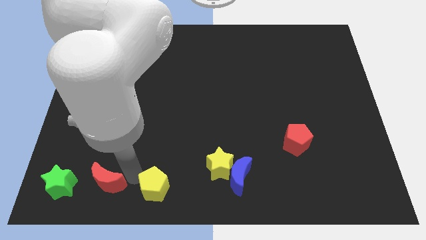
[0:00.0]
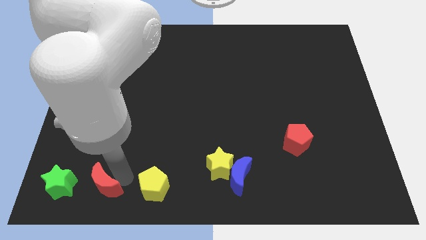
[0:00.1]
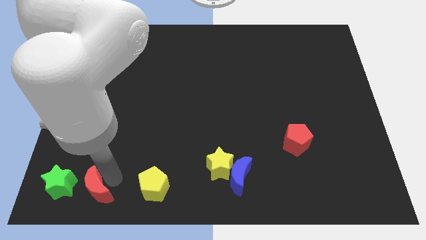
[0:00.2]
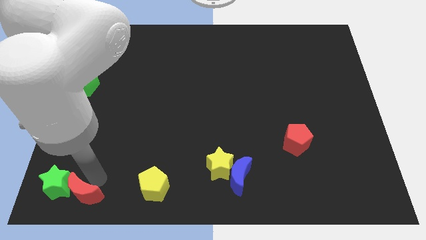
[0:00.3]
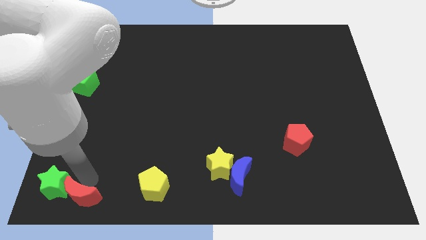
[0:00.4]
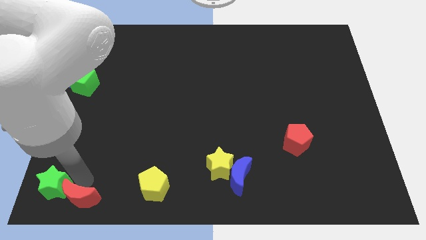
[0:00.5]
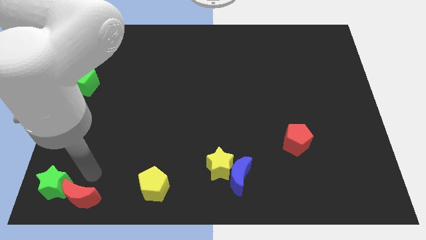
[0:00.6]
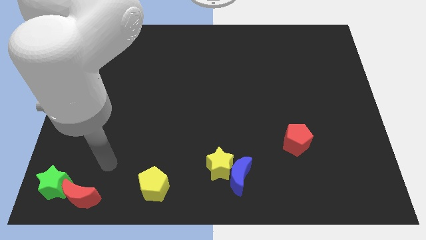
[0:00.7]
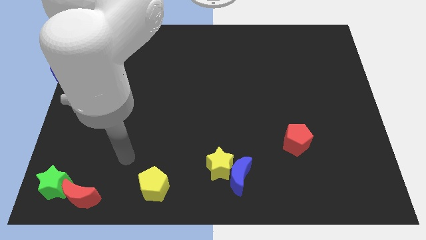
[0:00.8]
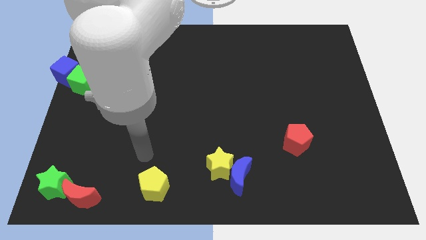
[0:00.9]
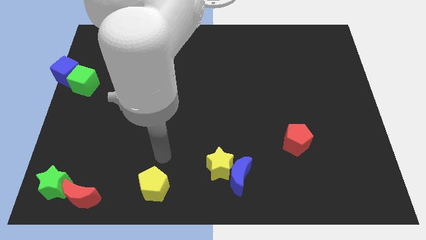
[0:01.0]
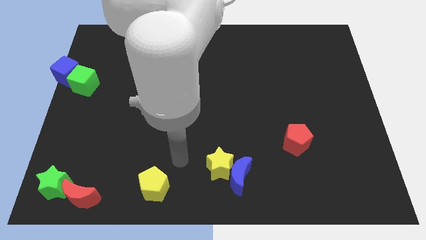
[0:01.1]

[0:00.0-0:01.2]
slide the red crescent into the green star

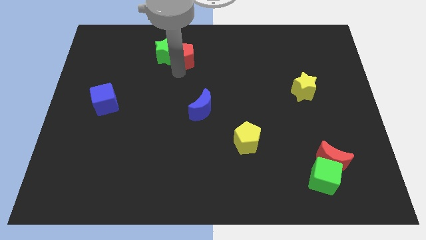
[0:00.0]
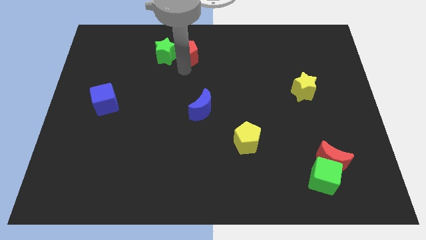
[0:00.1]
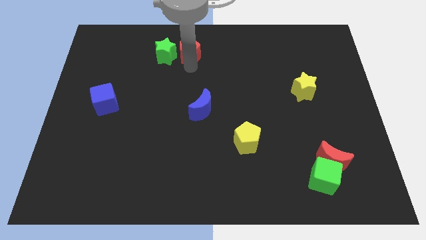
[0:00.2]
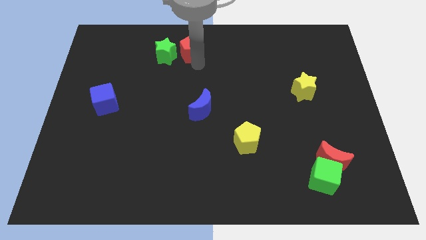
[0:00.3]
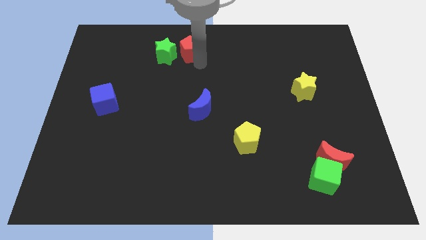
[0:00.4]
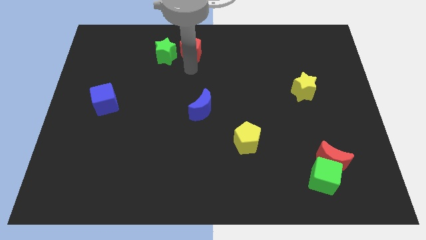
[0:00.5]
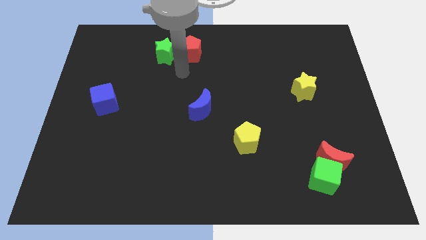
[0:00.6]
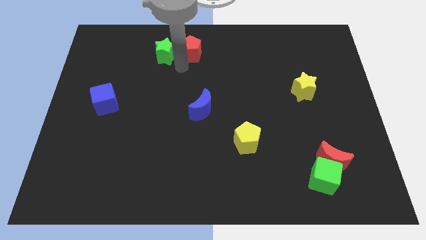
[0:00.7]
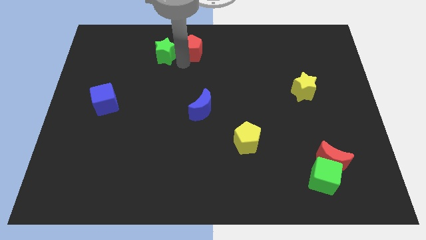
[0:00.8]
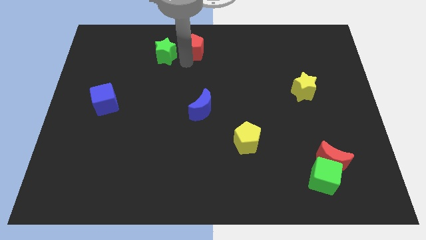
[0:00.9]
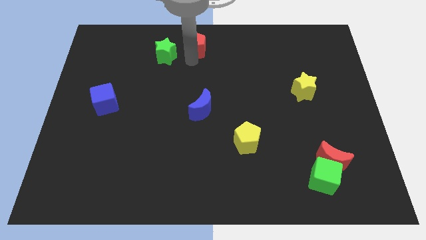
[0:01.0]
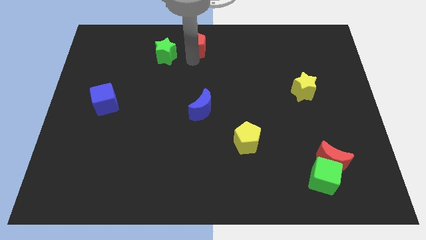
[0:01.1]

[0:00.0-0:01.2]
slightly move the red pentagon towards the top center of the board

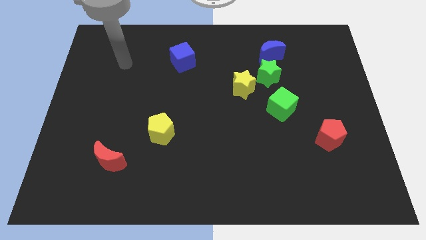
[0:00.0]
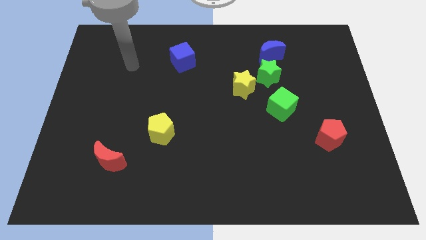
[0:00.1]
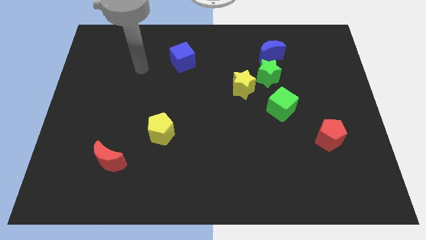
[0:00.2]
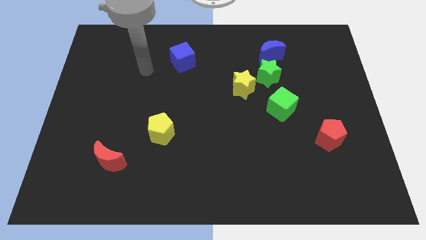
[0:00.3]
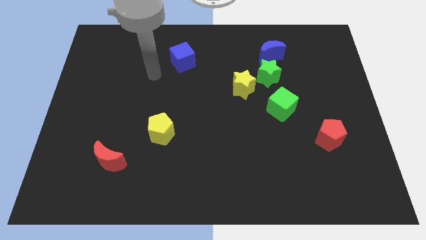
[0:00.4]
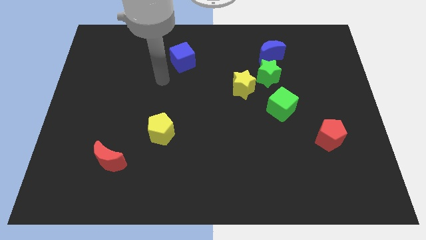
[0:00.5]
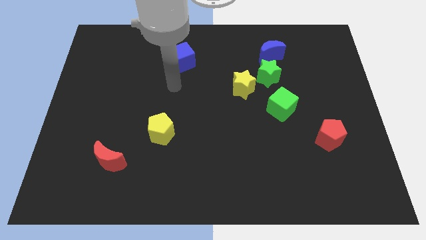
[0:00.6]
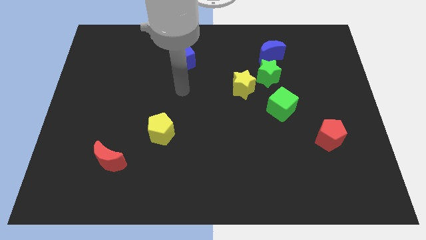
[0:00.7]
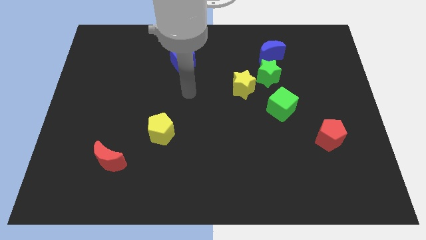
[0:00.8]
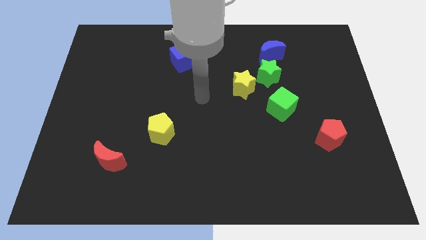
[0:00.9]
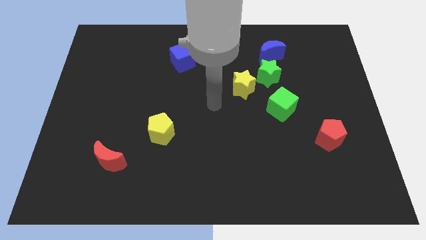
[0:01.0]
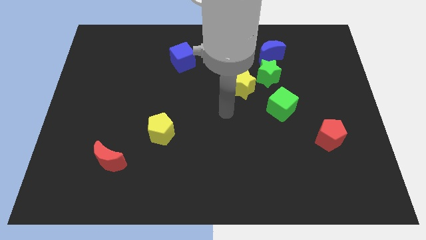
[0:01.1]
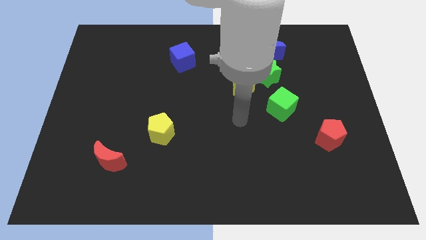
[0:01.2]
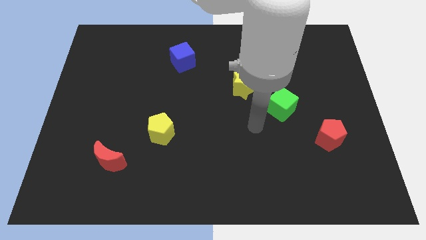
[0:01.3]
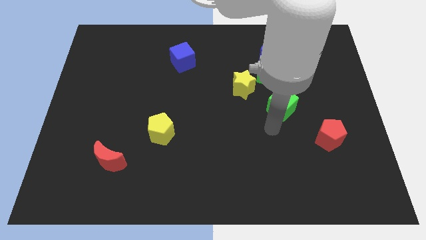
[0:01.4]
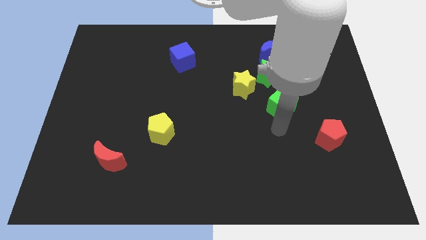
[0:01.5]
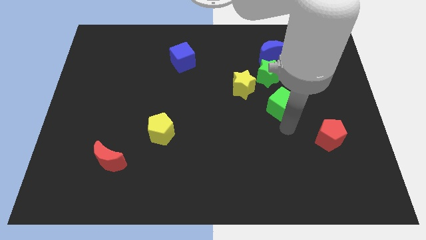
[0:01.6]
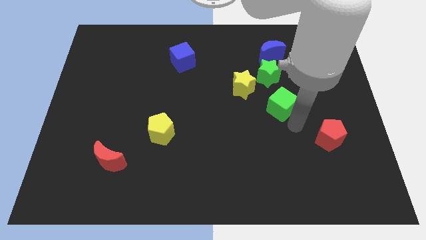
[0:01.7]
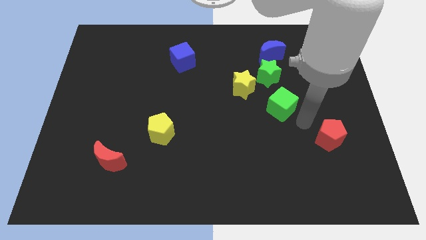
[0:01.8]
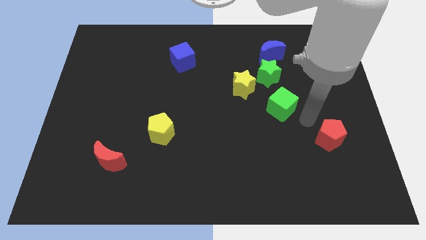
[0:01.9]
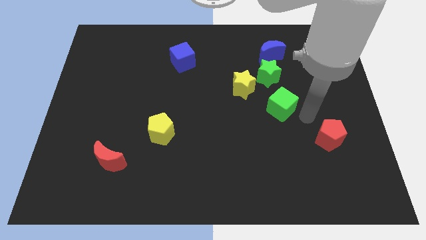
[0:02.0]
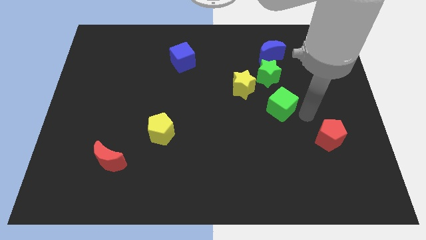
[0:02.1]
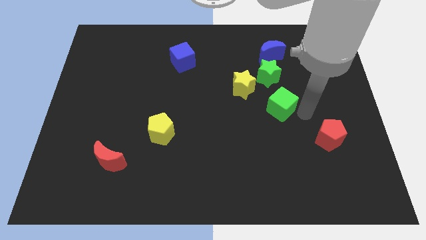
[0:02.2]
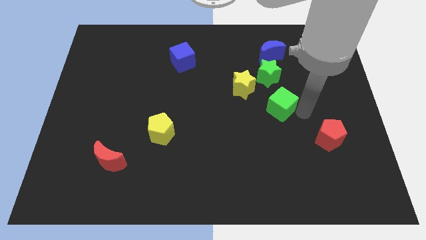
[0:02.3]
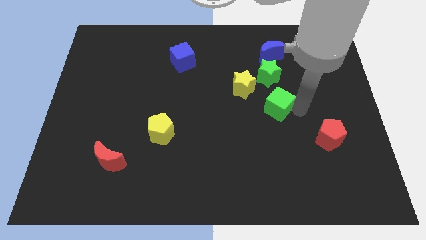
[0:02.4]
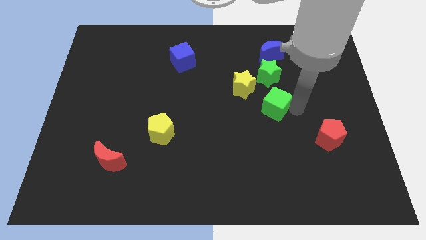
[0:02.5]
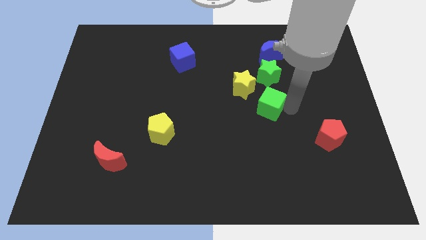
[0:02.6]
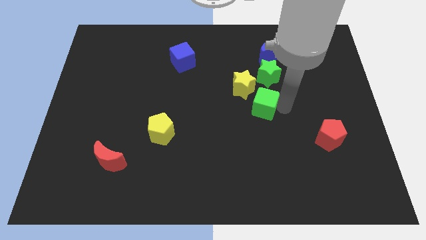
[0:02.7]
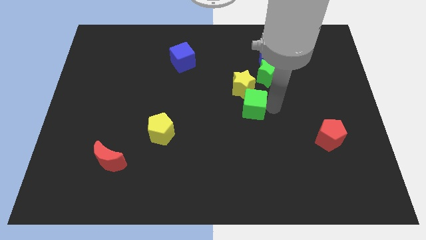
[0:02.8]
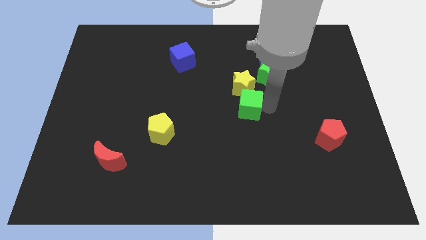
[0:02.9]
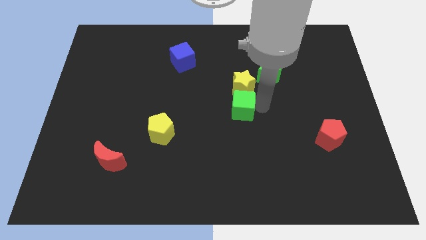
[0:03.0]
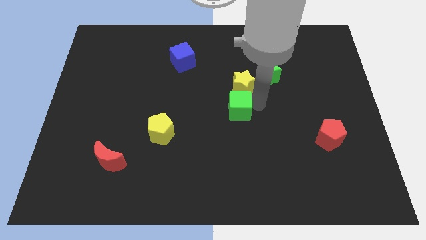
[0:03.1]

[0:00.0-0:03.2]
place the green cube below the yellow star

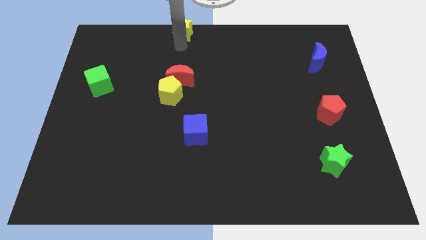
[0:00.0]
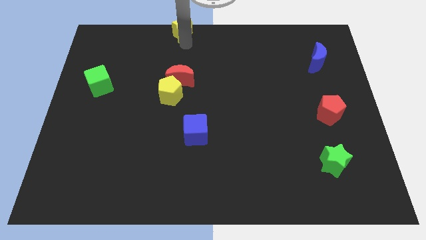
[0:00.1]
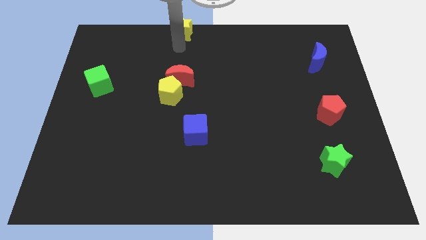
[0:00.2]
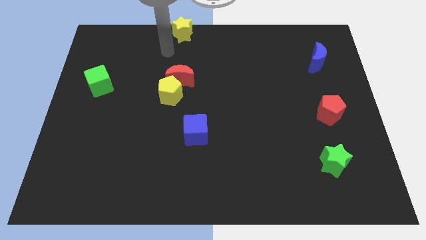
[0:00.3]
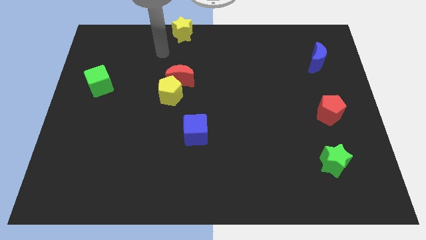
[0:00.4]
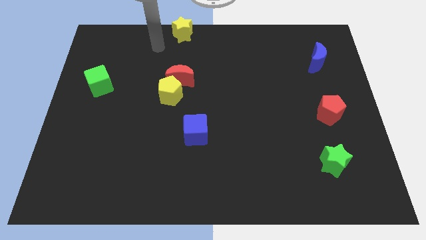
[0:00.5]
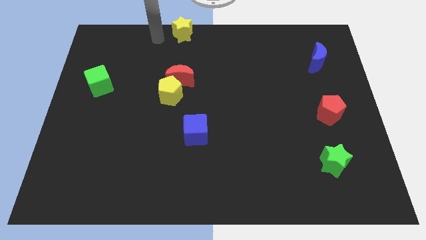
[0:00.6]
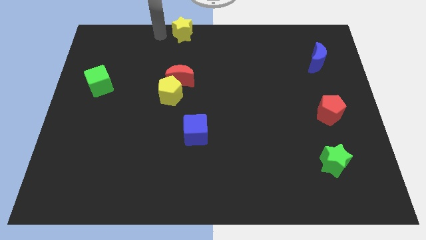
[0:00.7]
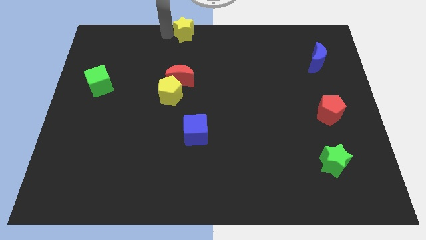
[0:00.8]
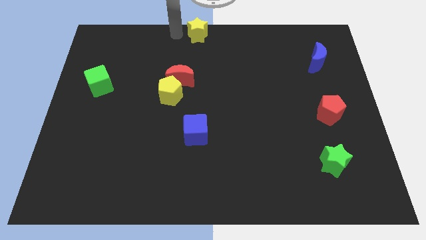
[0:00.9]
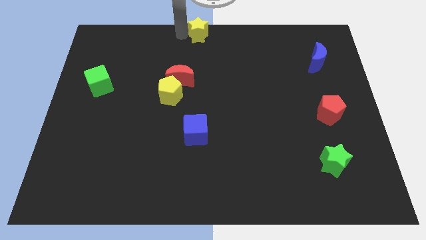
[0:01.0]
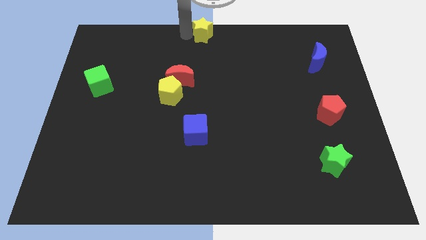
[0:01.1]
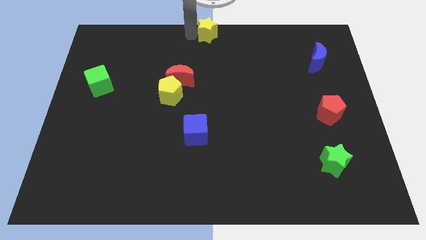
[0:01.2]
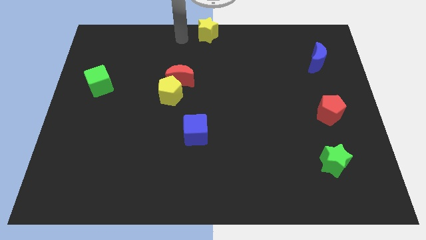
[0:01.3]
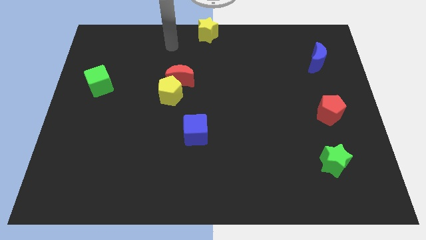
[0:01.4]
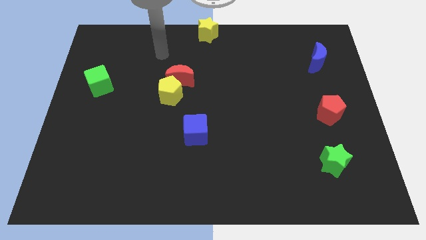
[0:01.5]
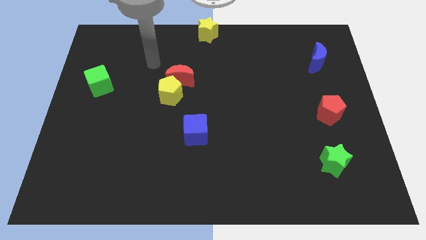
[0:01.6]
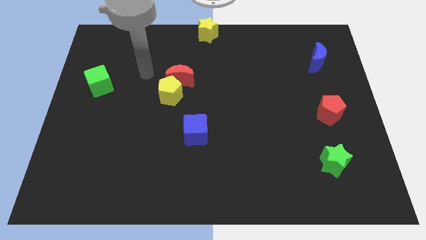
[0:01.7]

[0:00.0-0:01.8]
push the yellow star towards the right

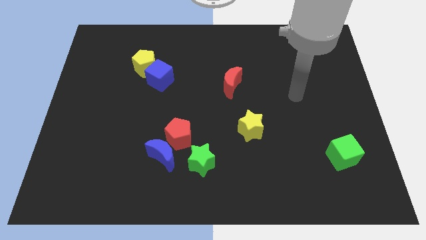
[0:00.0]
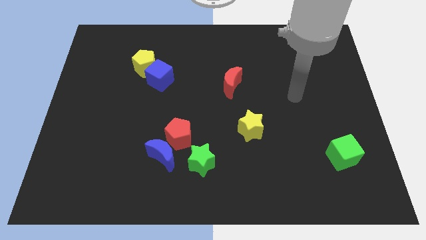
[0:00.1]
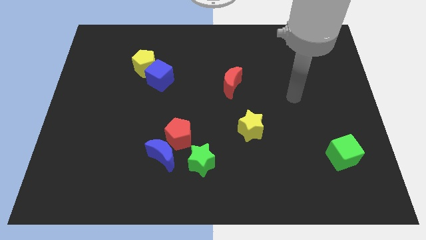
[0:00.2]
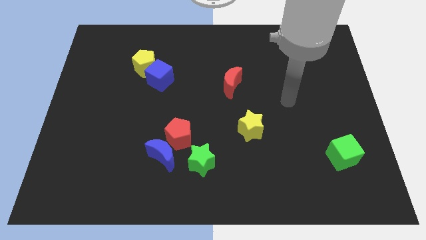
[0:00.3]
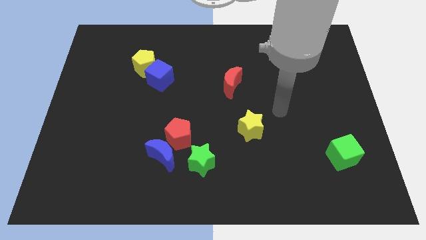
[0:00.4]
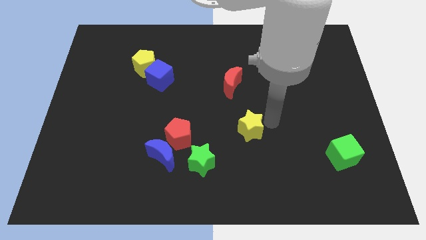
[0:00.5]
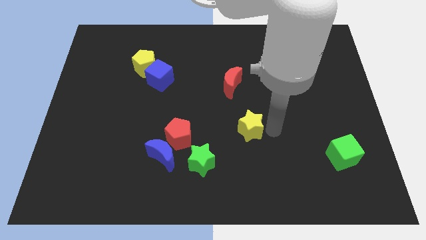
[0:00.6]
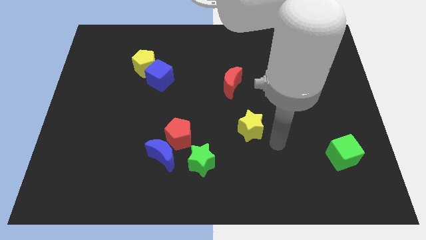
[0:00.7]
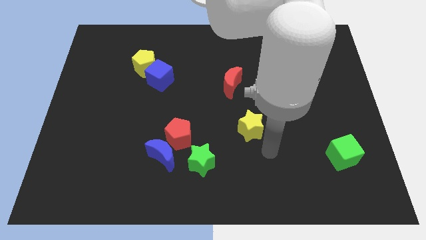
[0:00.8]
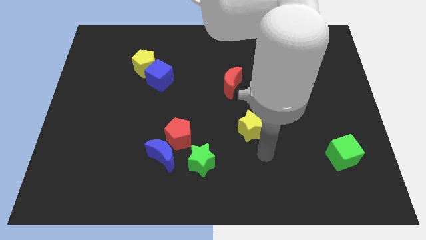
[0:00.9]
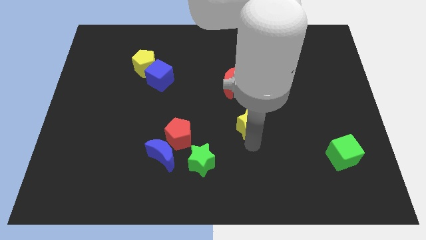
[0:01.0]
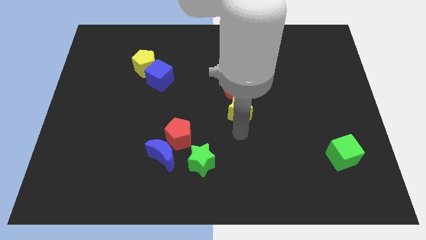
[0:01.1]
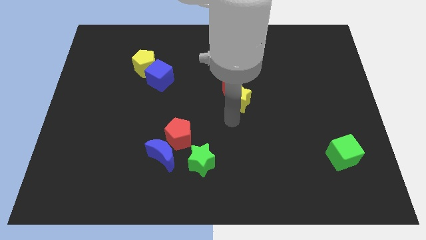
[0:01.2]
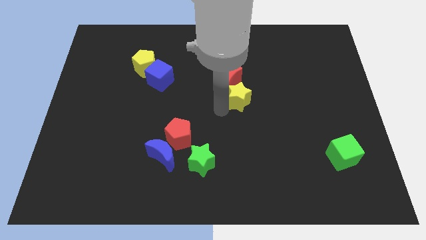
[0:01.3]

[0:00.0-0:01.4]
place your arm below yellow star

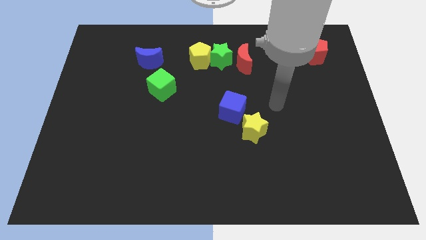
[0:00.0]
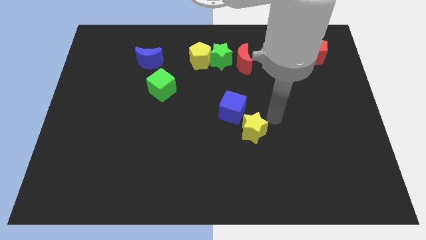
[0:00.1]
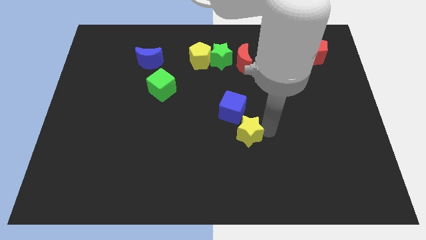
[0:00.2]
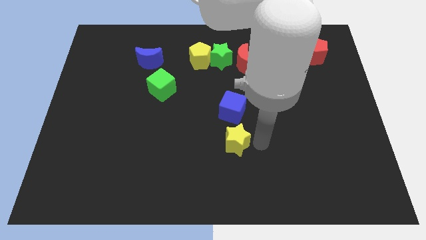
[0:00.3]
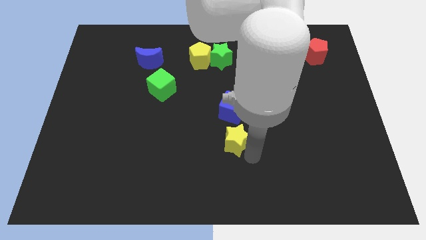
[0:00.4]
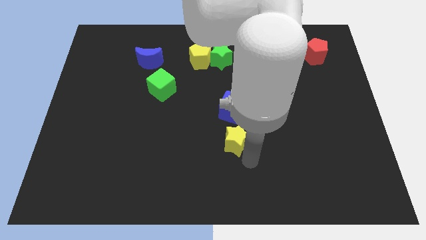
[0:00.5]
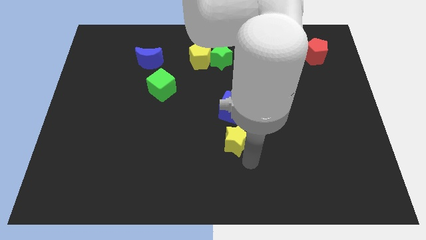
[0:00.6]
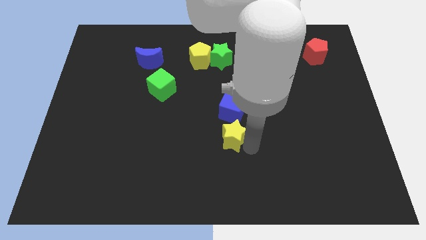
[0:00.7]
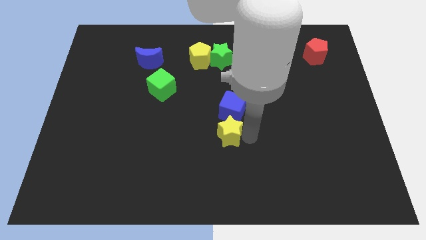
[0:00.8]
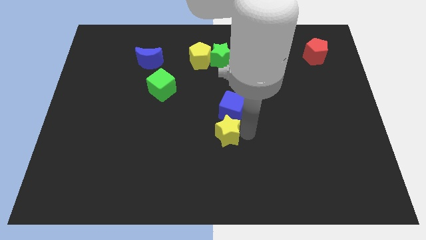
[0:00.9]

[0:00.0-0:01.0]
move yellow star below blue cube
